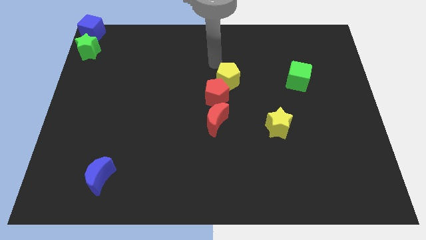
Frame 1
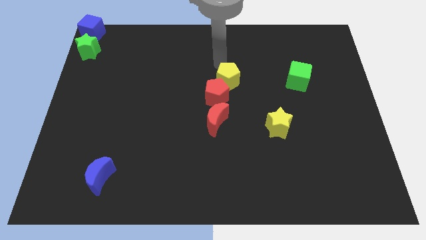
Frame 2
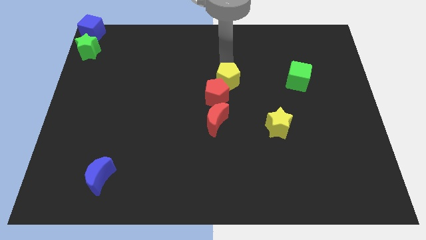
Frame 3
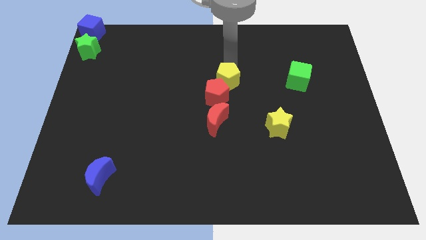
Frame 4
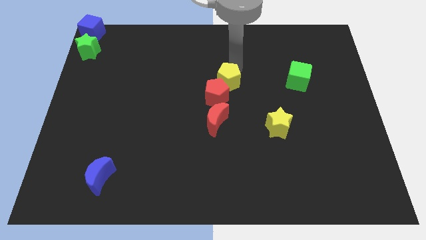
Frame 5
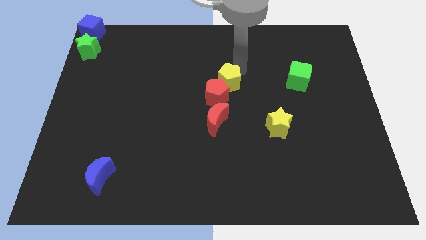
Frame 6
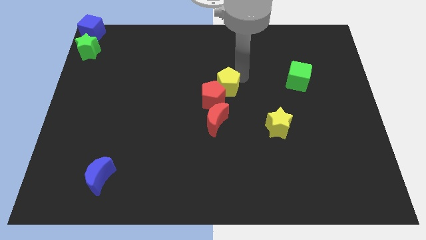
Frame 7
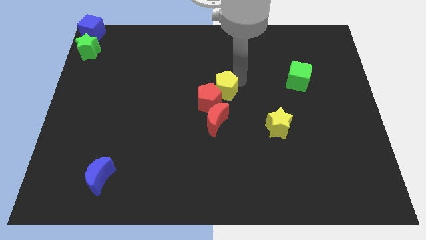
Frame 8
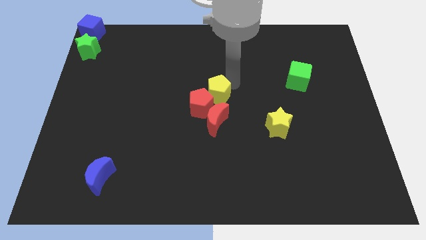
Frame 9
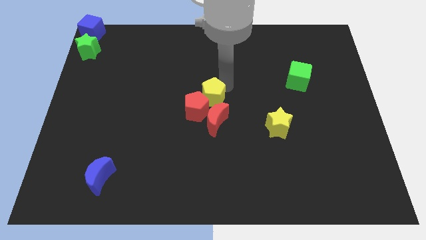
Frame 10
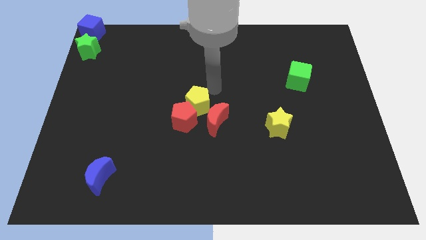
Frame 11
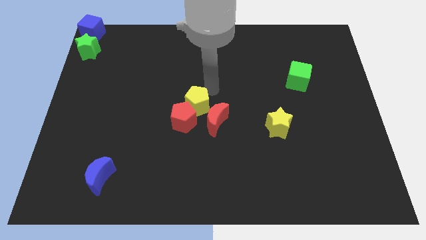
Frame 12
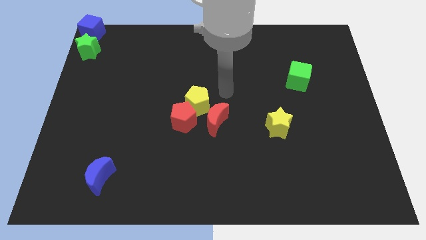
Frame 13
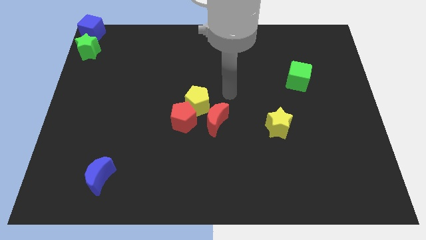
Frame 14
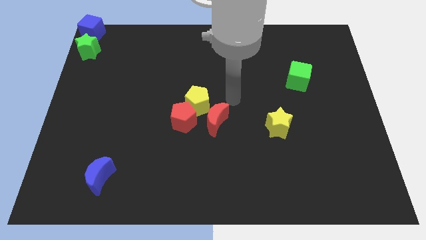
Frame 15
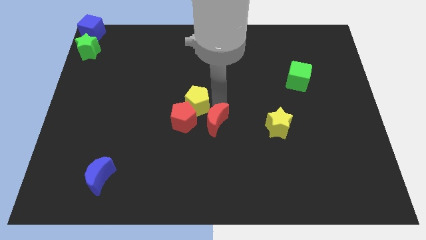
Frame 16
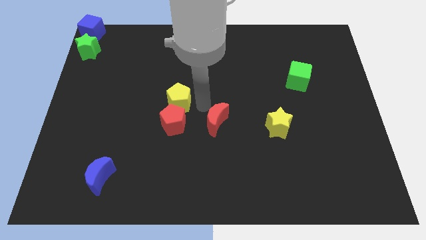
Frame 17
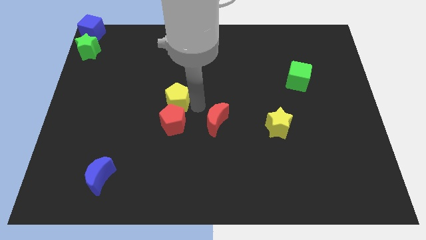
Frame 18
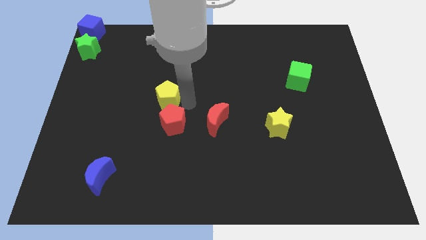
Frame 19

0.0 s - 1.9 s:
push the red pentagon with yellow pentagon

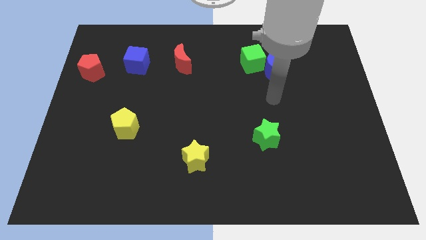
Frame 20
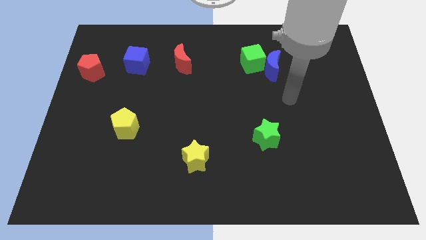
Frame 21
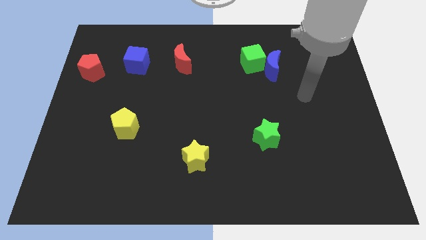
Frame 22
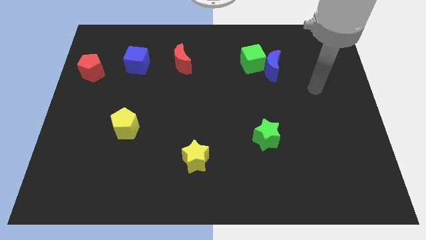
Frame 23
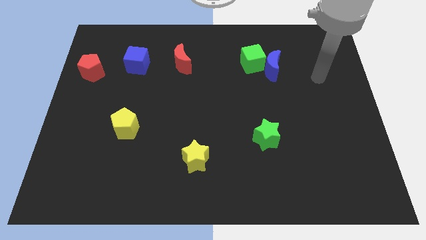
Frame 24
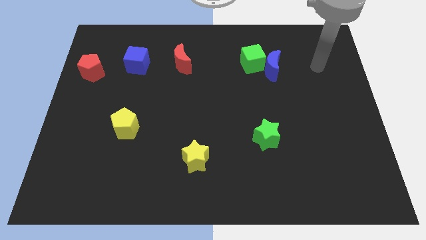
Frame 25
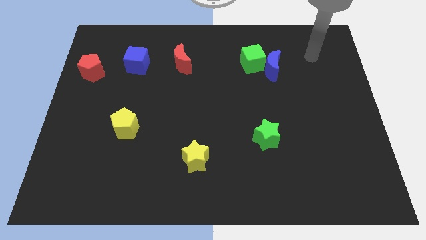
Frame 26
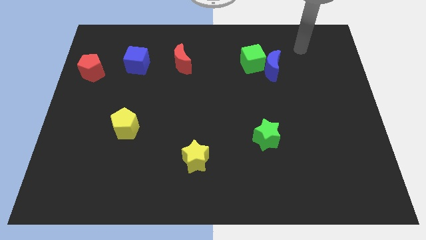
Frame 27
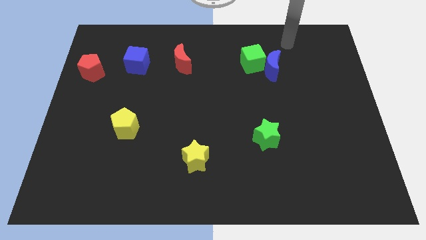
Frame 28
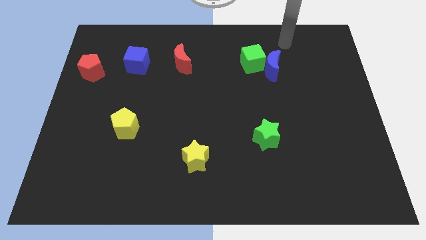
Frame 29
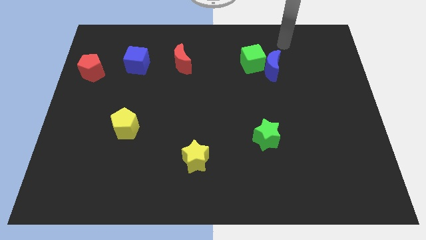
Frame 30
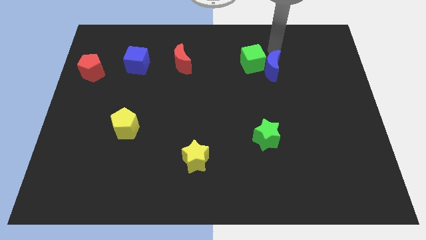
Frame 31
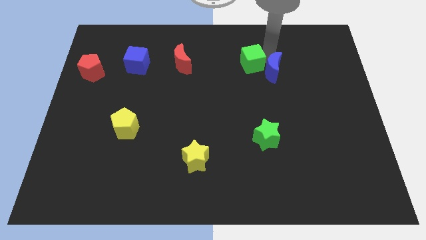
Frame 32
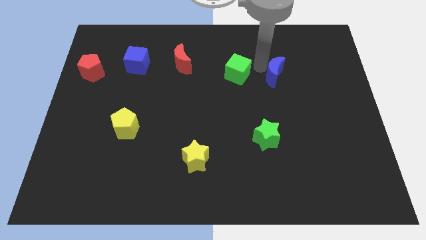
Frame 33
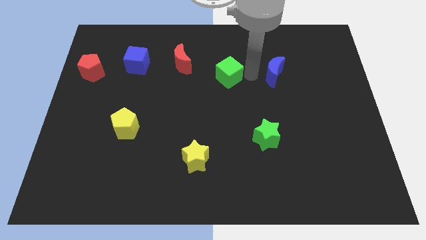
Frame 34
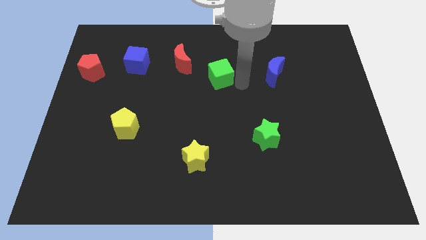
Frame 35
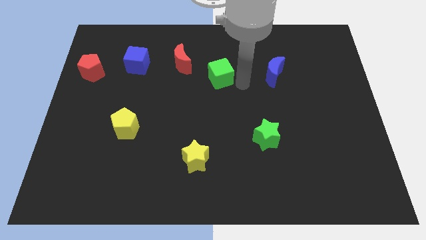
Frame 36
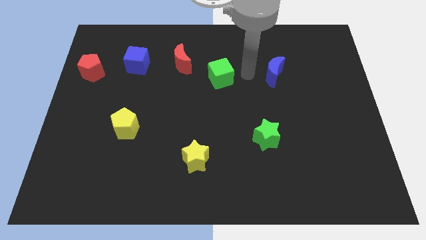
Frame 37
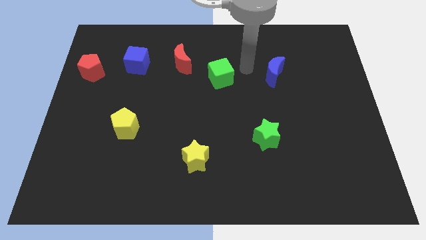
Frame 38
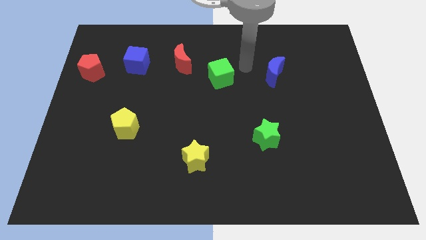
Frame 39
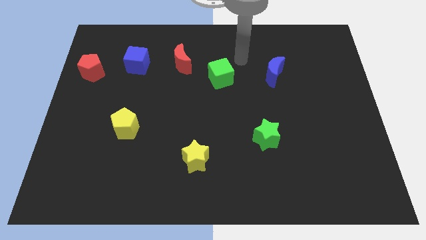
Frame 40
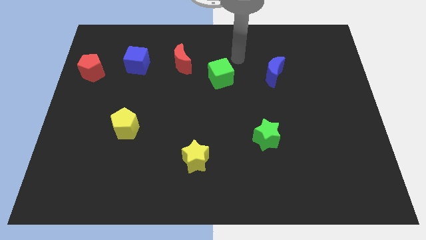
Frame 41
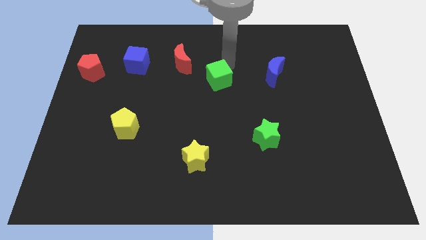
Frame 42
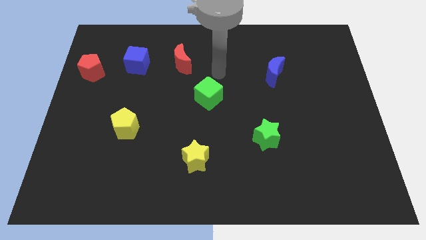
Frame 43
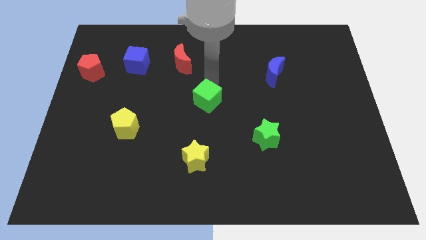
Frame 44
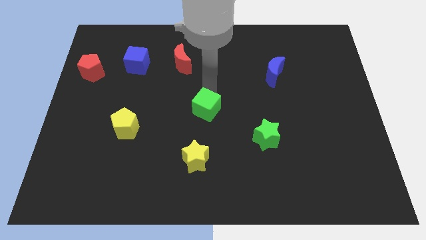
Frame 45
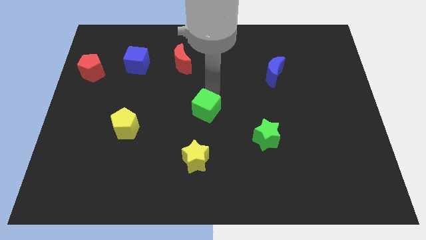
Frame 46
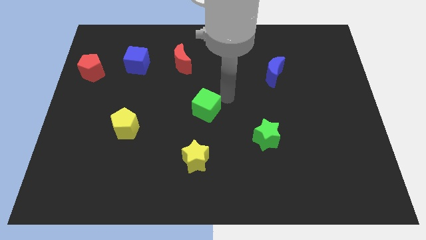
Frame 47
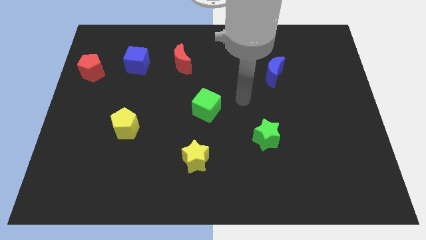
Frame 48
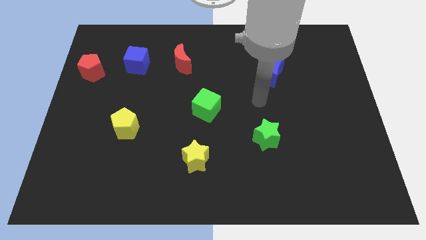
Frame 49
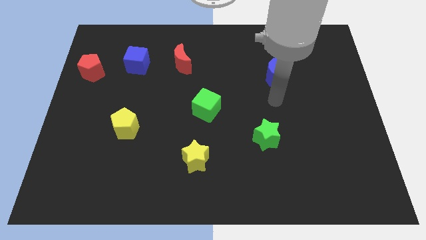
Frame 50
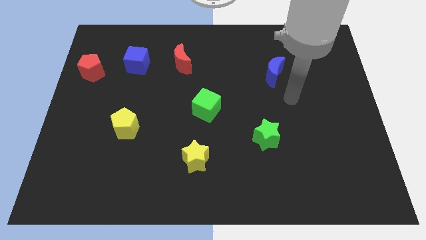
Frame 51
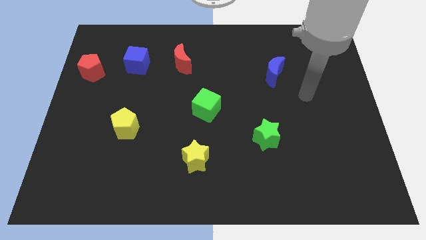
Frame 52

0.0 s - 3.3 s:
move the green cube at the center

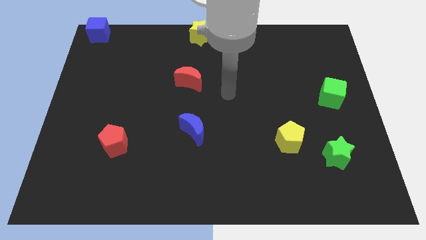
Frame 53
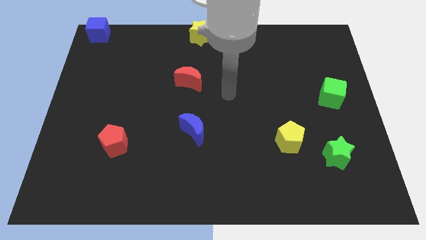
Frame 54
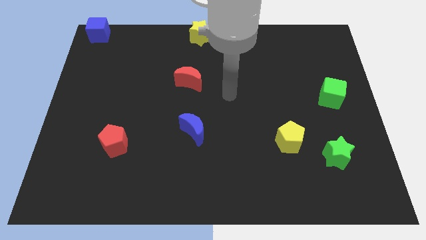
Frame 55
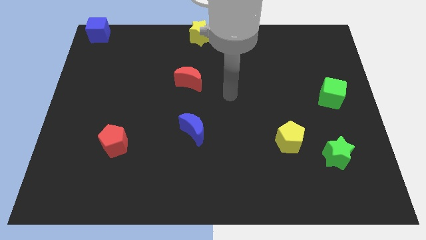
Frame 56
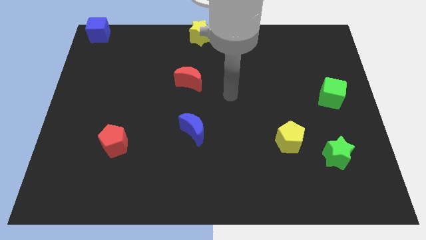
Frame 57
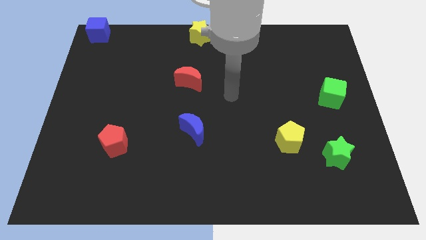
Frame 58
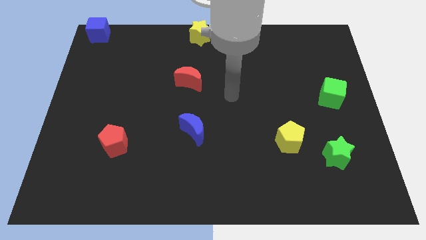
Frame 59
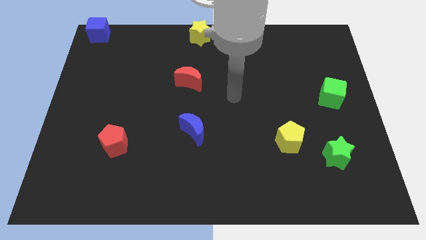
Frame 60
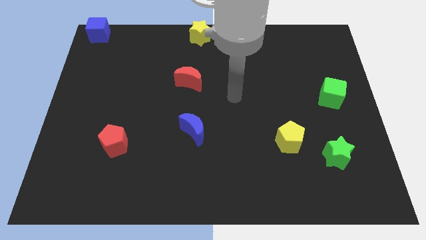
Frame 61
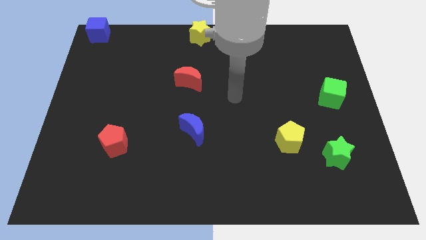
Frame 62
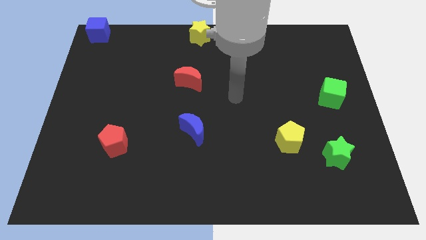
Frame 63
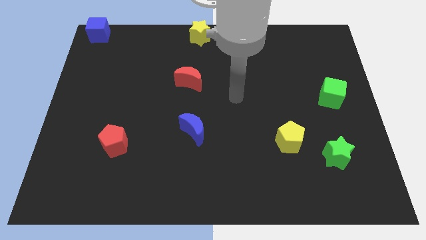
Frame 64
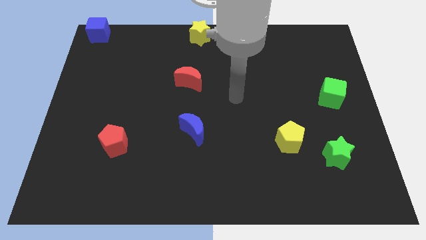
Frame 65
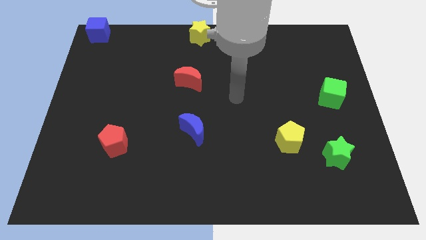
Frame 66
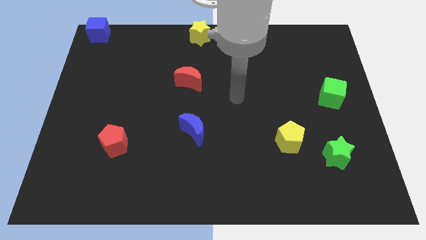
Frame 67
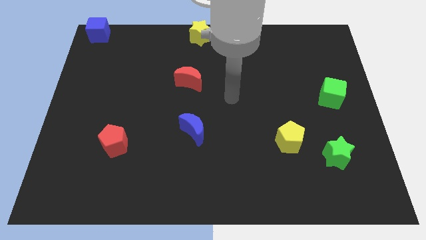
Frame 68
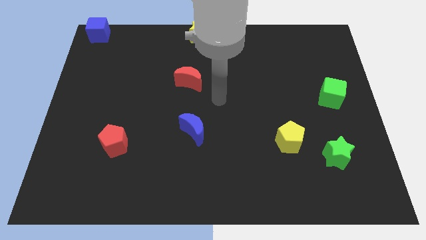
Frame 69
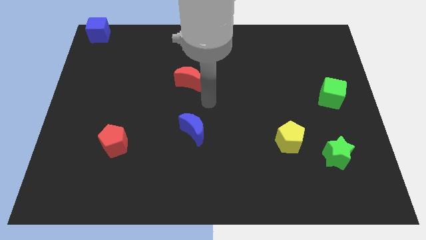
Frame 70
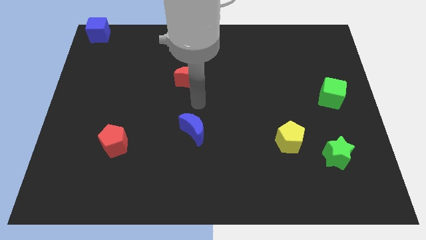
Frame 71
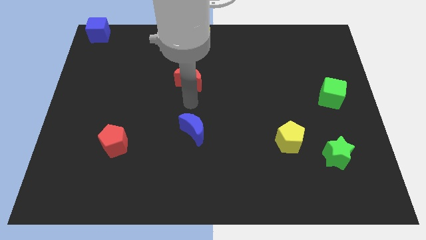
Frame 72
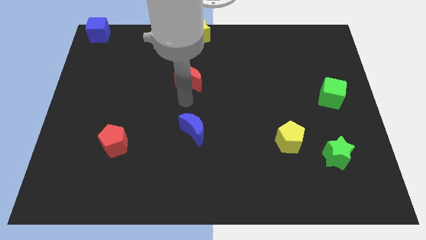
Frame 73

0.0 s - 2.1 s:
point your arm between red and blue moons

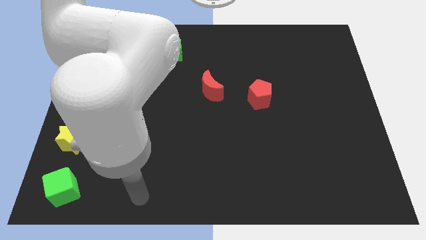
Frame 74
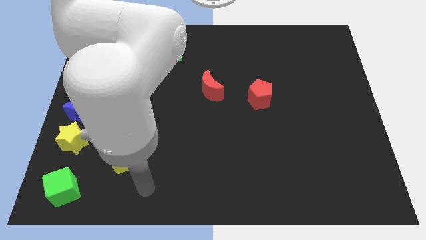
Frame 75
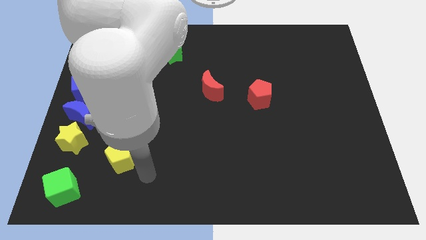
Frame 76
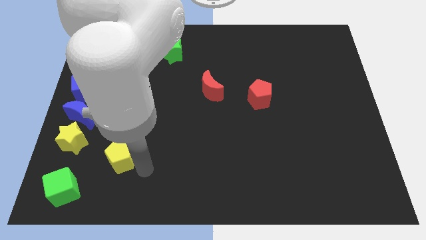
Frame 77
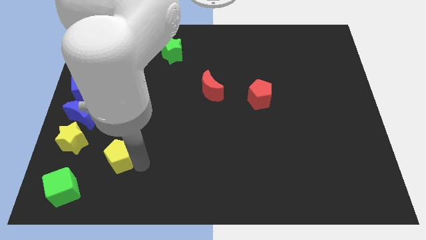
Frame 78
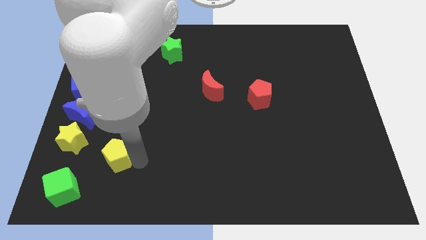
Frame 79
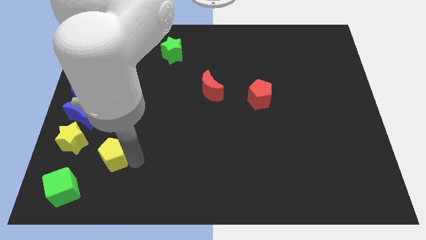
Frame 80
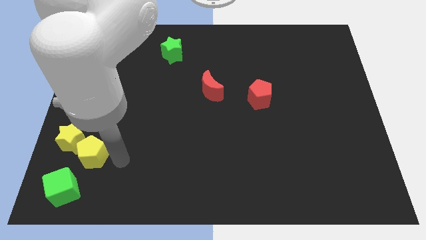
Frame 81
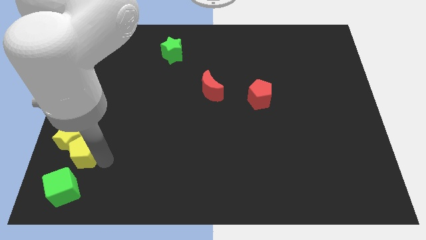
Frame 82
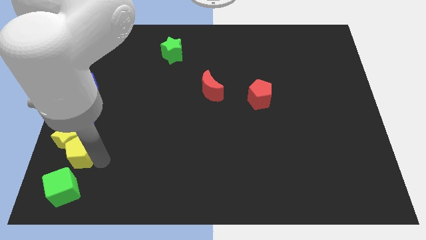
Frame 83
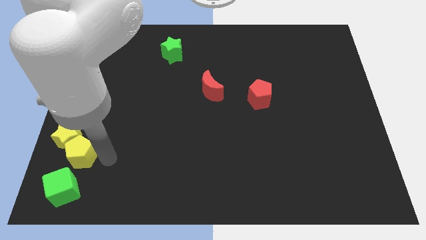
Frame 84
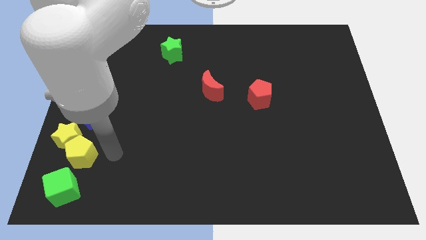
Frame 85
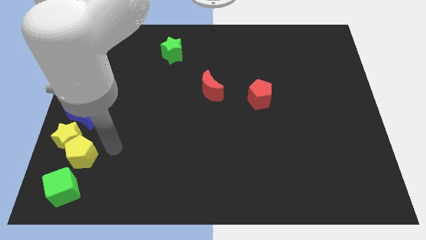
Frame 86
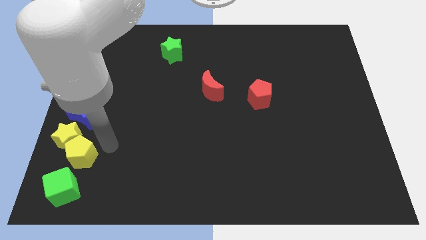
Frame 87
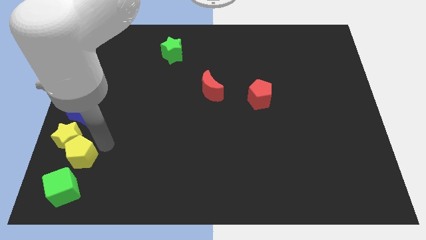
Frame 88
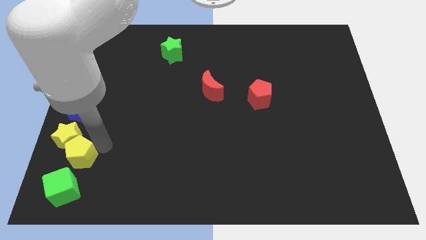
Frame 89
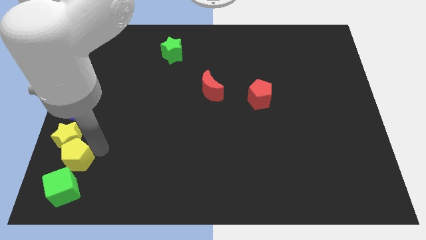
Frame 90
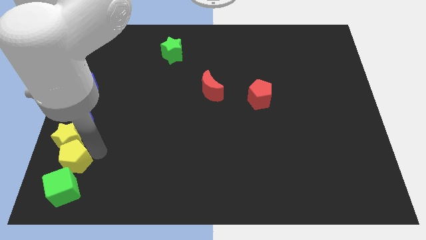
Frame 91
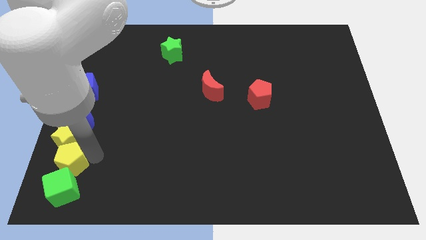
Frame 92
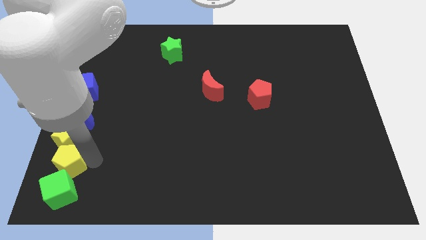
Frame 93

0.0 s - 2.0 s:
move the yellow pentagon to the top of the green cube
